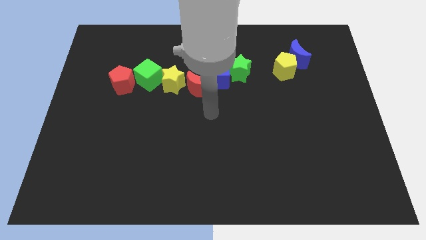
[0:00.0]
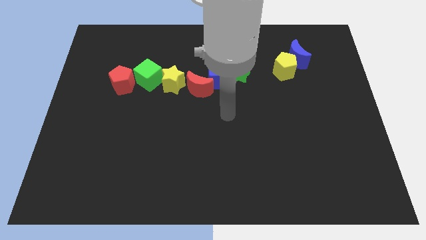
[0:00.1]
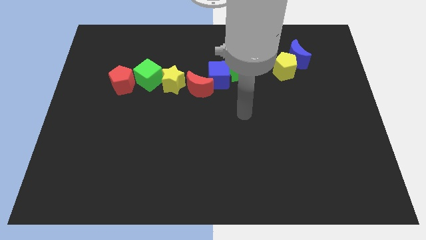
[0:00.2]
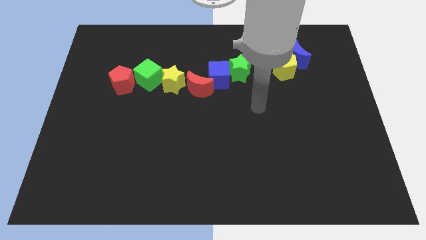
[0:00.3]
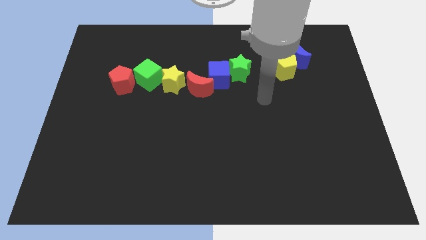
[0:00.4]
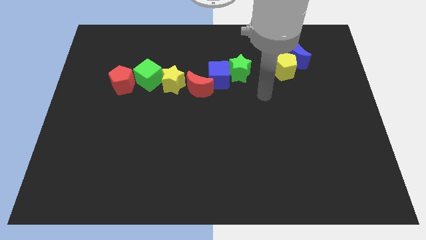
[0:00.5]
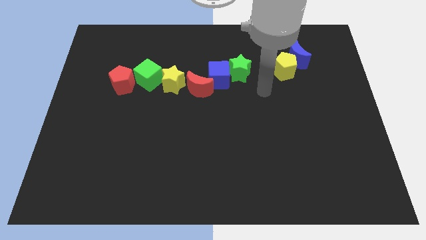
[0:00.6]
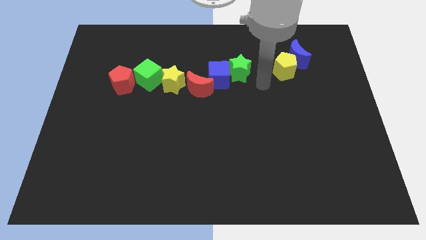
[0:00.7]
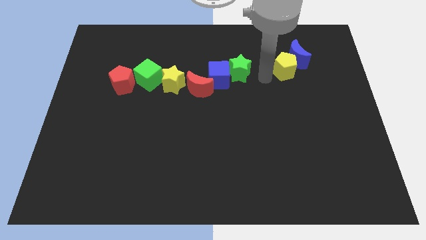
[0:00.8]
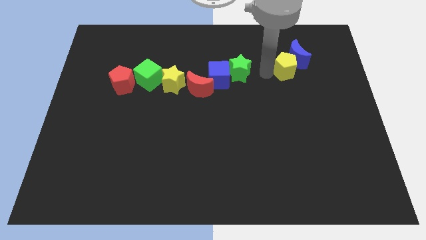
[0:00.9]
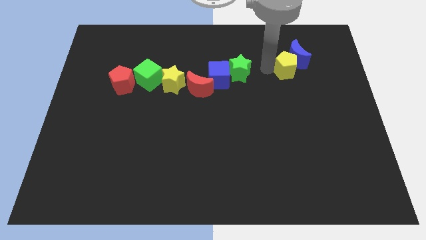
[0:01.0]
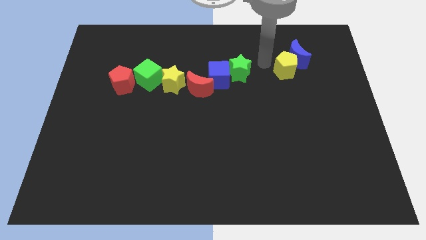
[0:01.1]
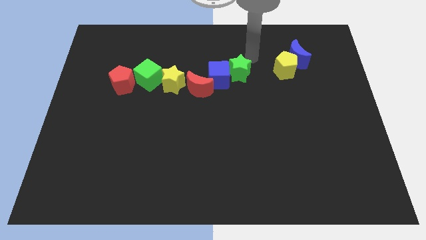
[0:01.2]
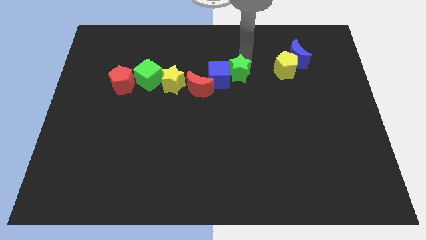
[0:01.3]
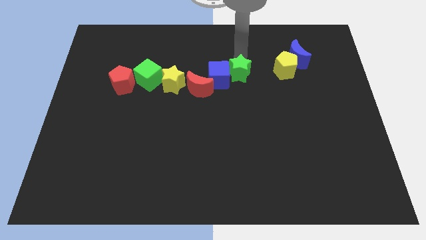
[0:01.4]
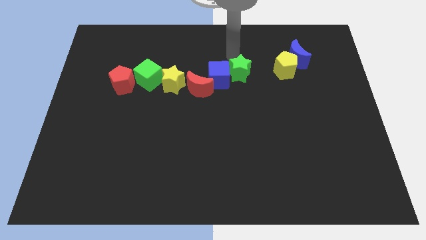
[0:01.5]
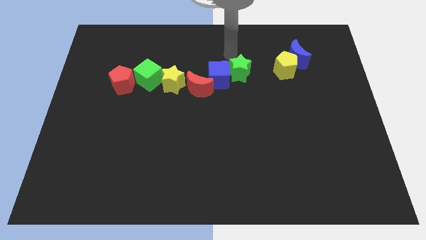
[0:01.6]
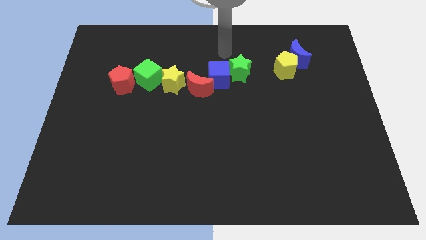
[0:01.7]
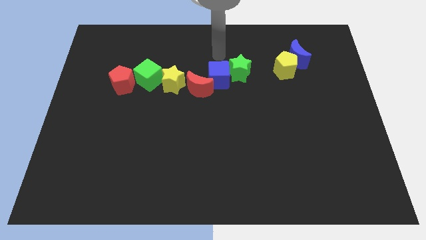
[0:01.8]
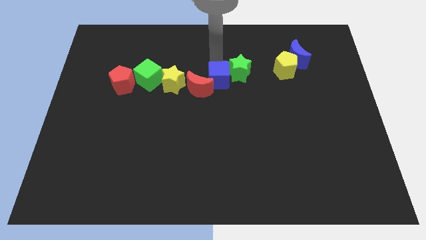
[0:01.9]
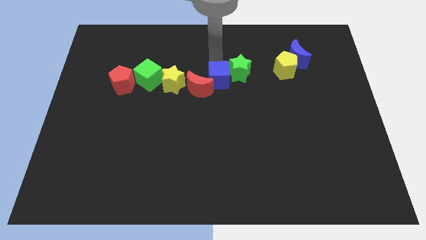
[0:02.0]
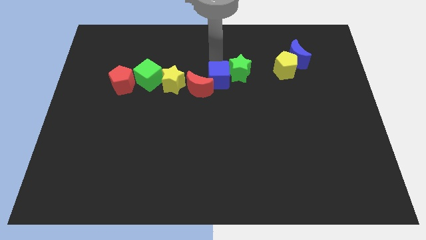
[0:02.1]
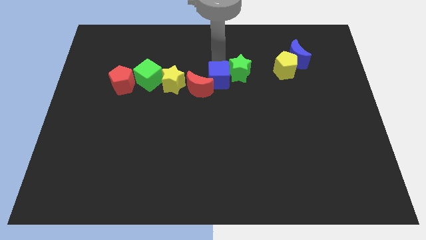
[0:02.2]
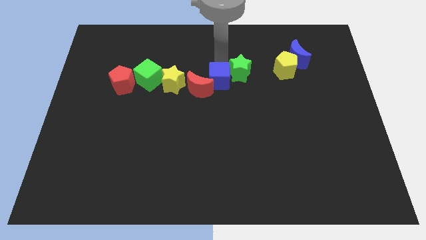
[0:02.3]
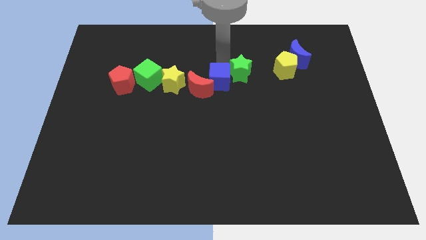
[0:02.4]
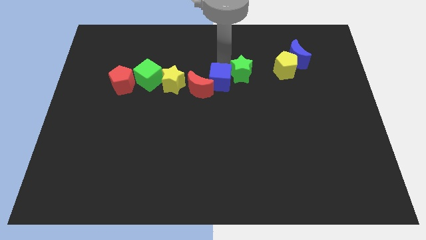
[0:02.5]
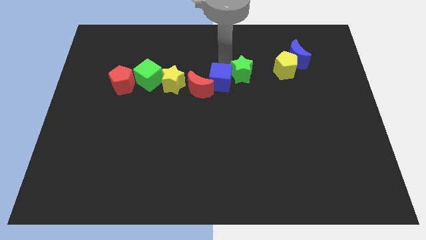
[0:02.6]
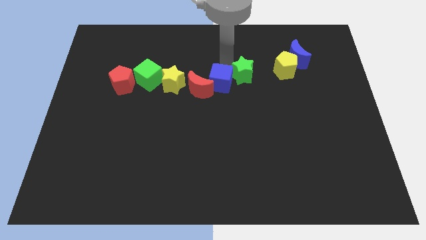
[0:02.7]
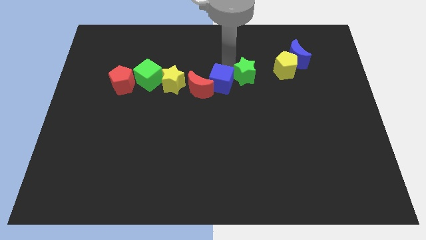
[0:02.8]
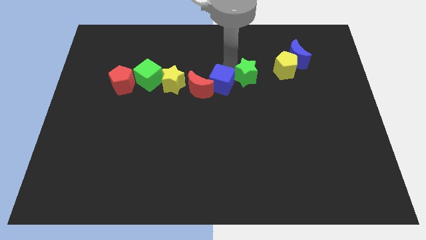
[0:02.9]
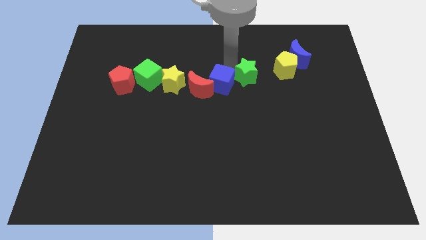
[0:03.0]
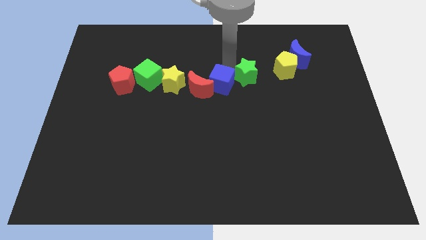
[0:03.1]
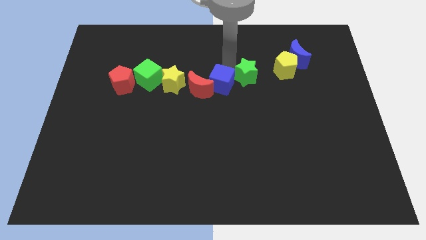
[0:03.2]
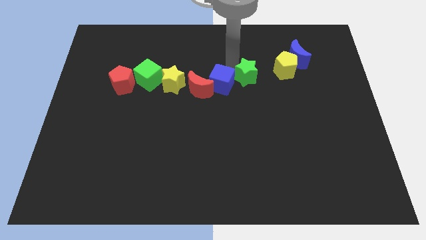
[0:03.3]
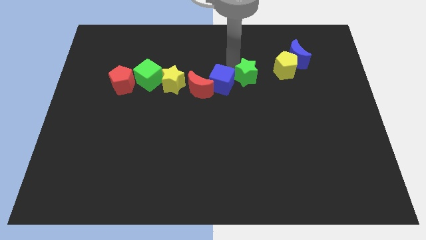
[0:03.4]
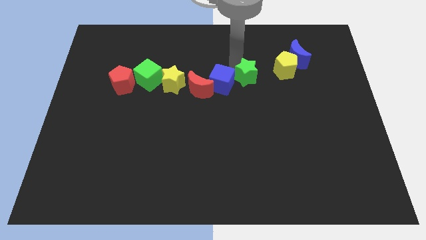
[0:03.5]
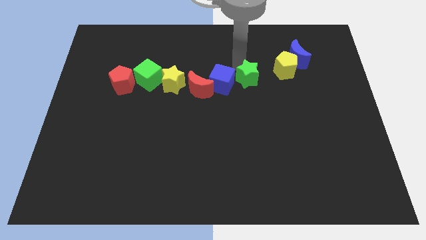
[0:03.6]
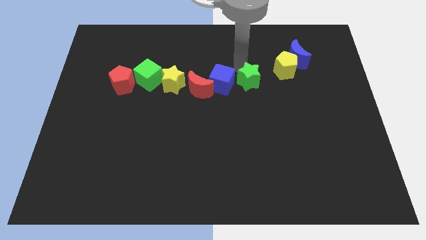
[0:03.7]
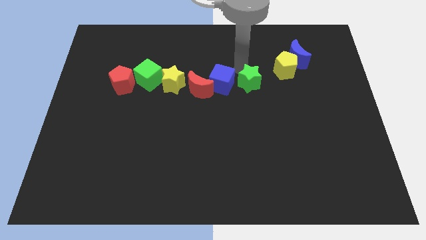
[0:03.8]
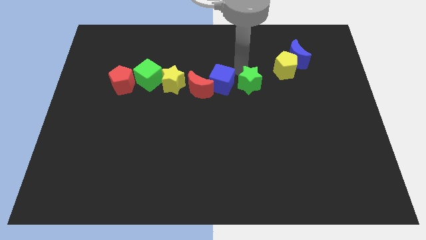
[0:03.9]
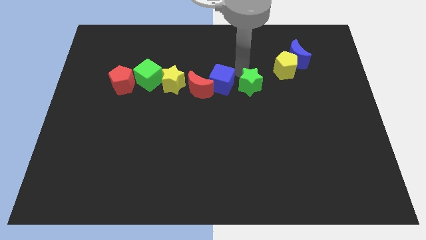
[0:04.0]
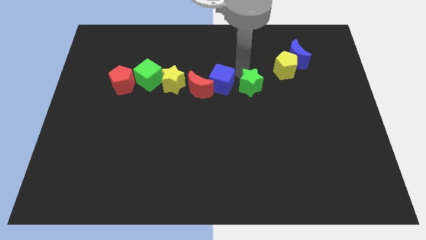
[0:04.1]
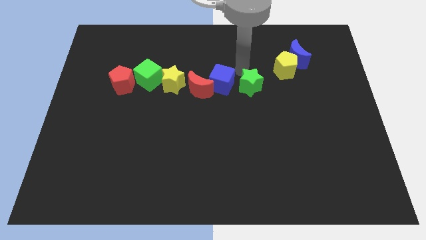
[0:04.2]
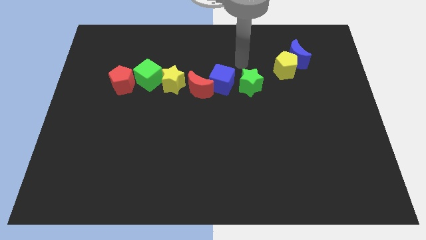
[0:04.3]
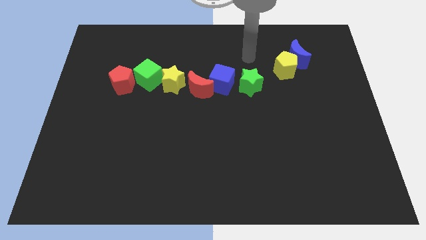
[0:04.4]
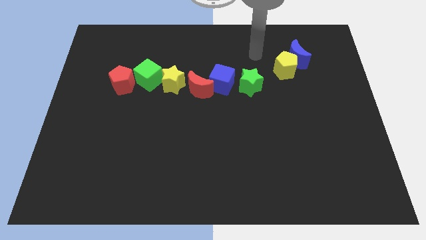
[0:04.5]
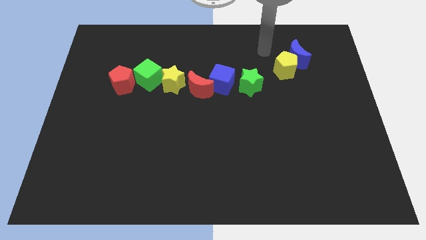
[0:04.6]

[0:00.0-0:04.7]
separate green star and the blue cube

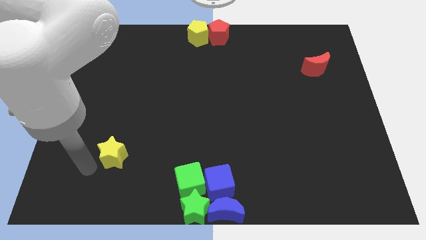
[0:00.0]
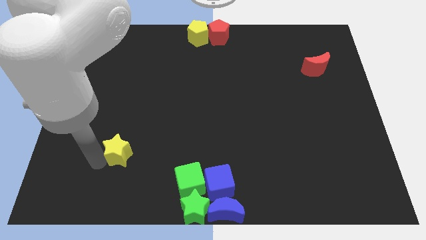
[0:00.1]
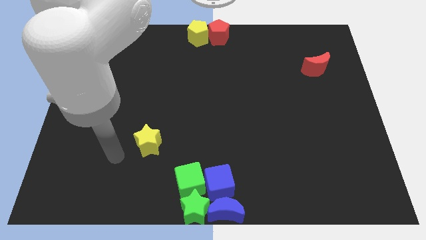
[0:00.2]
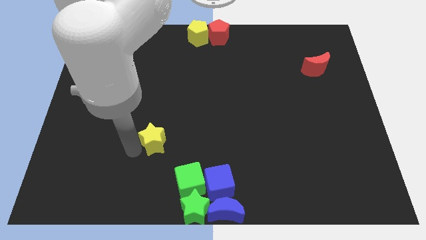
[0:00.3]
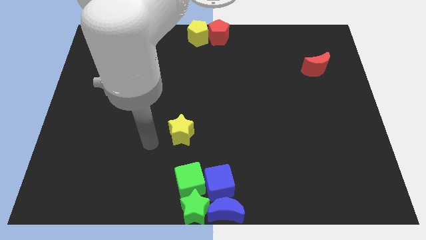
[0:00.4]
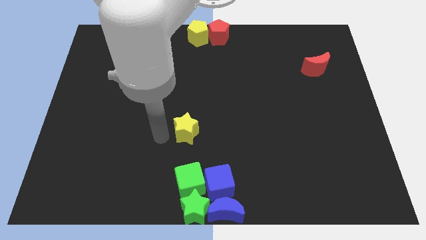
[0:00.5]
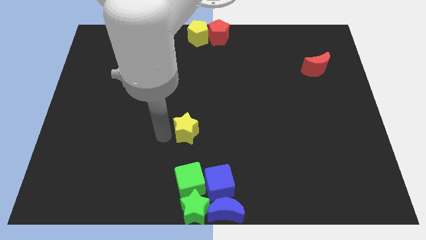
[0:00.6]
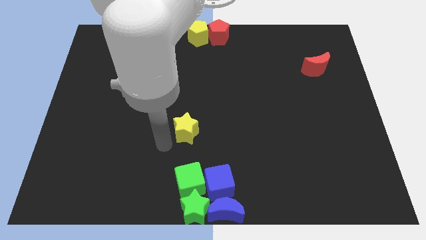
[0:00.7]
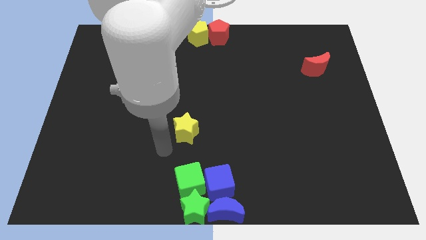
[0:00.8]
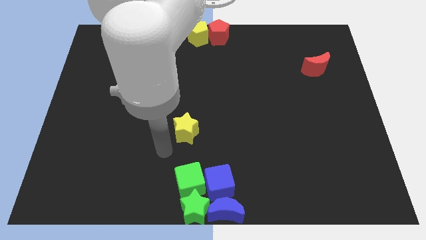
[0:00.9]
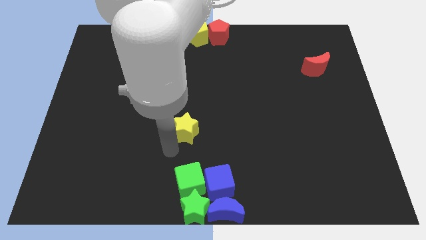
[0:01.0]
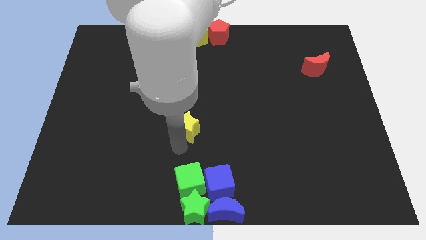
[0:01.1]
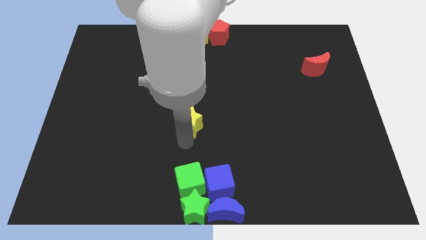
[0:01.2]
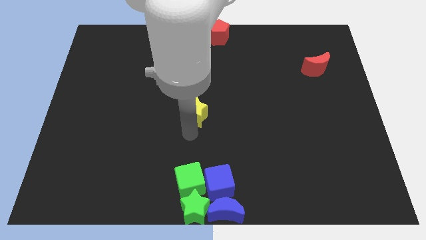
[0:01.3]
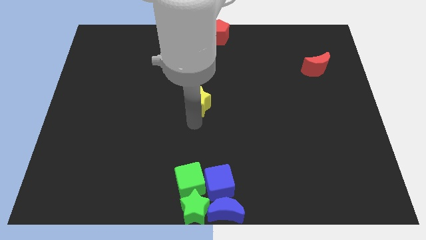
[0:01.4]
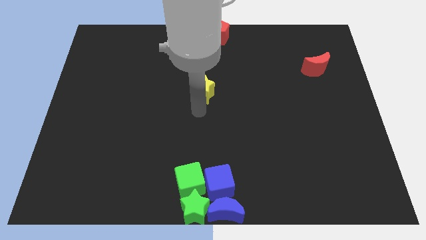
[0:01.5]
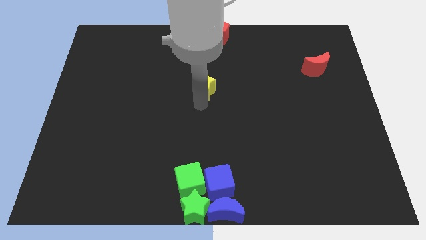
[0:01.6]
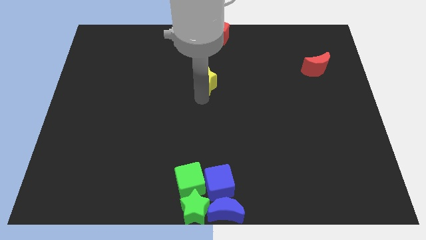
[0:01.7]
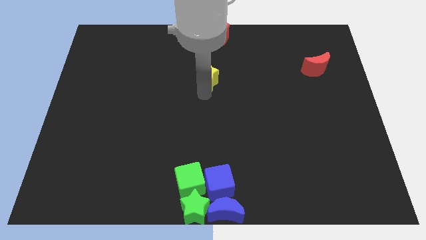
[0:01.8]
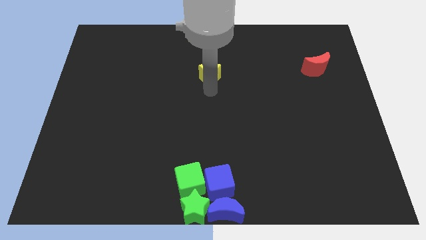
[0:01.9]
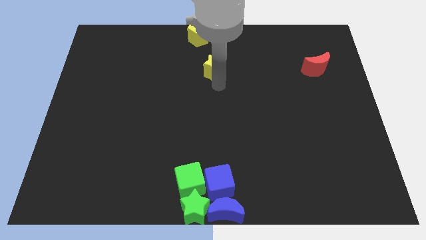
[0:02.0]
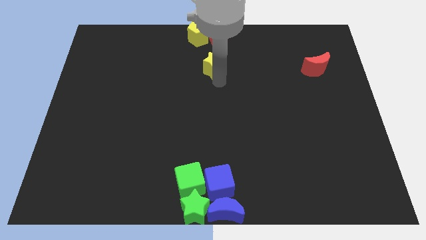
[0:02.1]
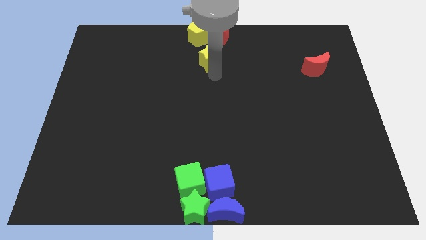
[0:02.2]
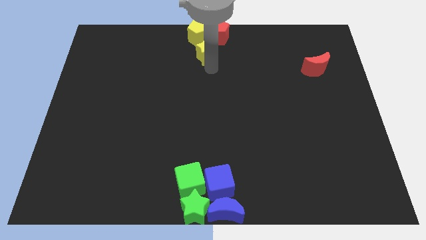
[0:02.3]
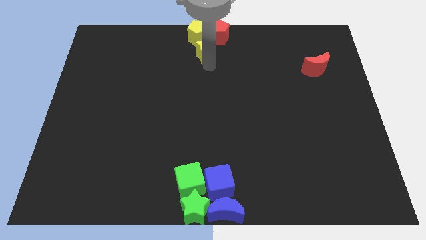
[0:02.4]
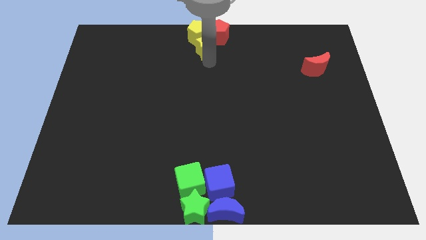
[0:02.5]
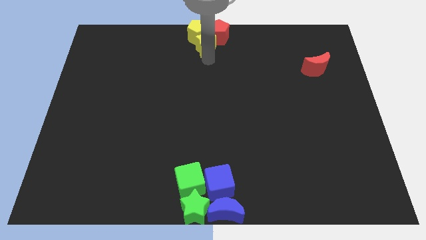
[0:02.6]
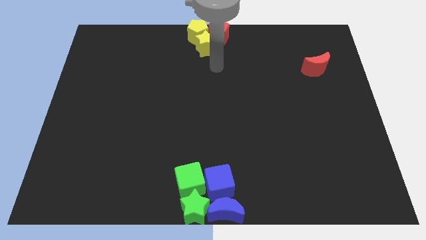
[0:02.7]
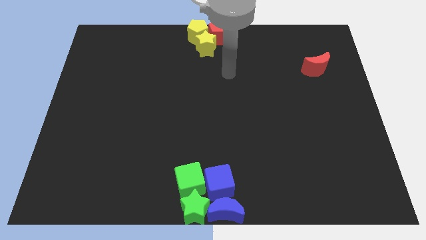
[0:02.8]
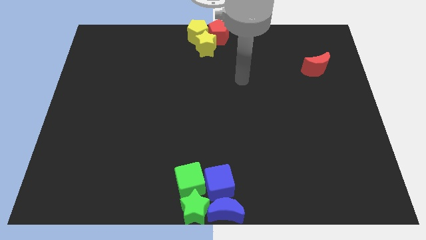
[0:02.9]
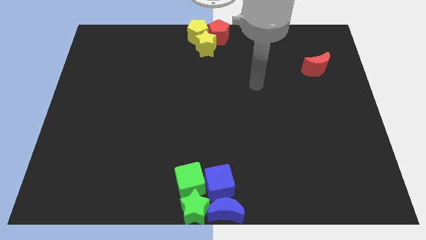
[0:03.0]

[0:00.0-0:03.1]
move the yellow star into the yellow pentagon

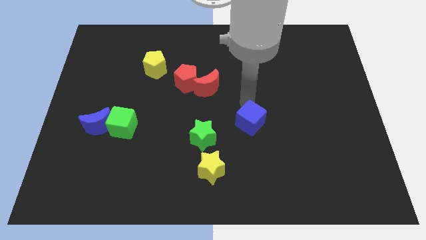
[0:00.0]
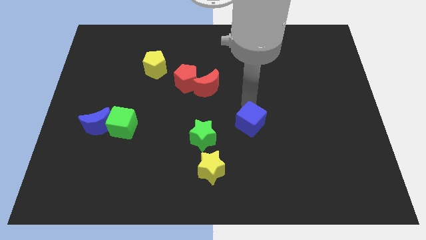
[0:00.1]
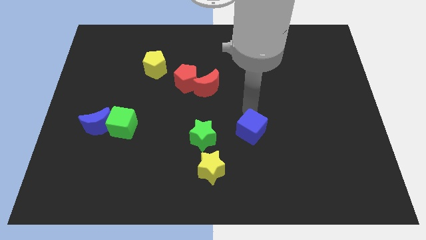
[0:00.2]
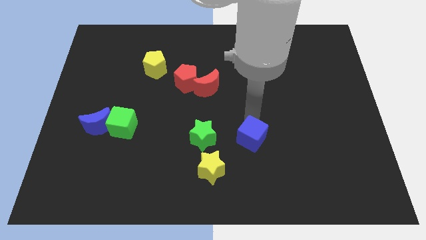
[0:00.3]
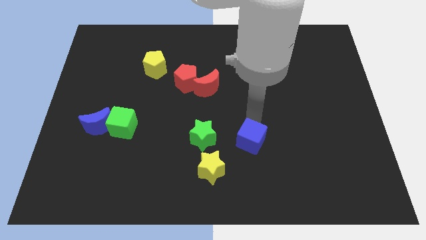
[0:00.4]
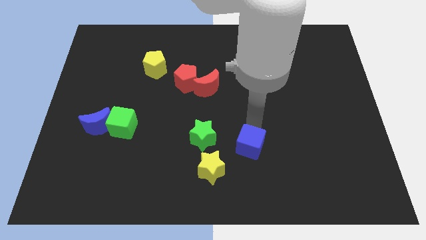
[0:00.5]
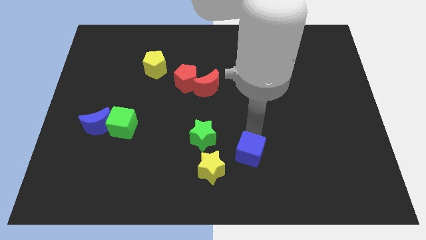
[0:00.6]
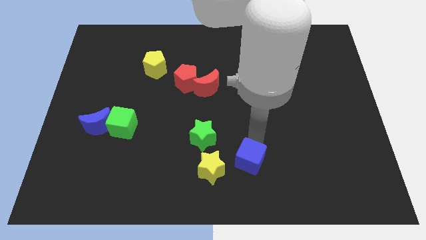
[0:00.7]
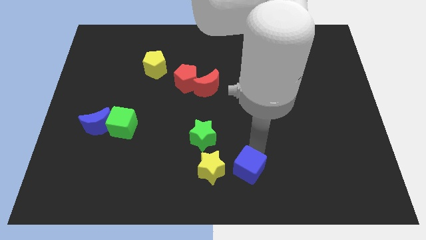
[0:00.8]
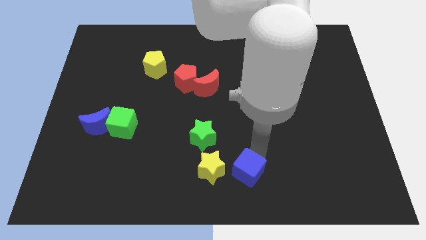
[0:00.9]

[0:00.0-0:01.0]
place cube right to yellow star
